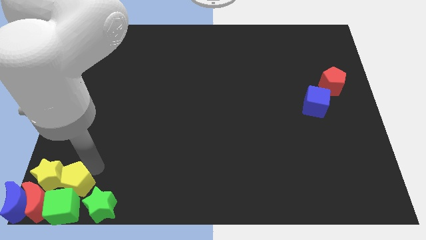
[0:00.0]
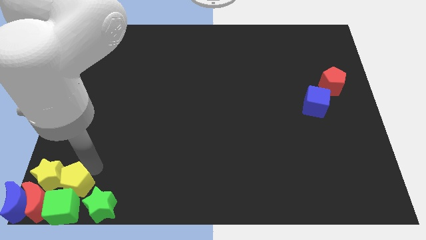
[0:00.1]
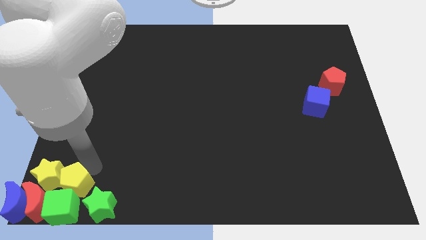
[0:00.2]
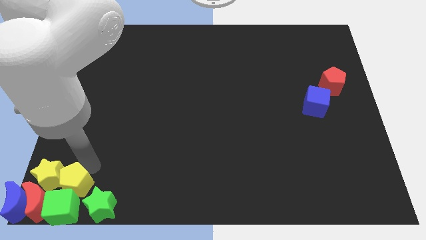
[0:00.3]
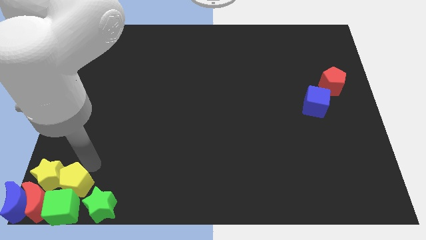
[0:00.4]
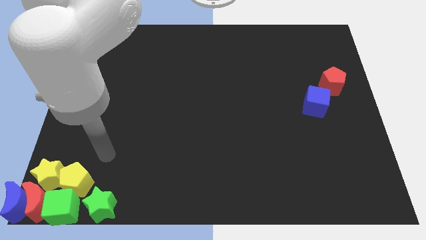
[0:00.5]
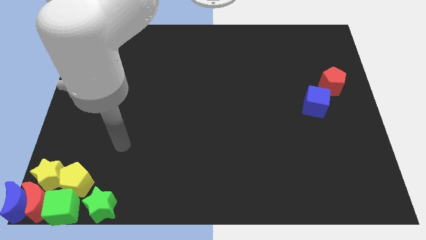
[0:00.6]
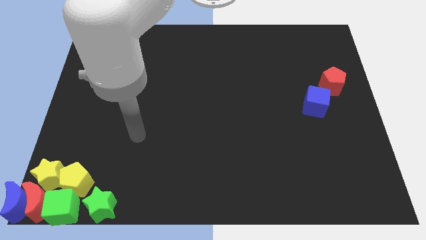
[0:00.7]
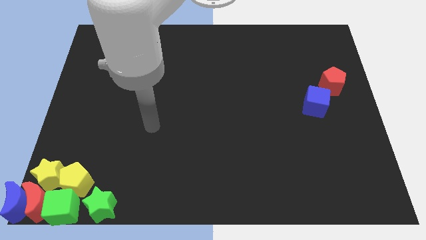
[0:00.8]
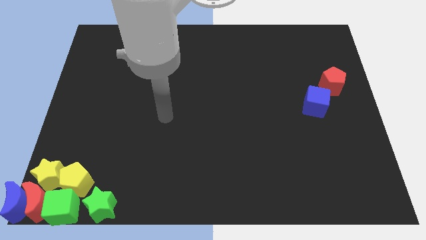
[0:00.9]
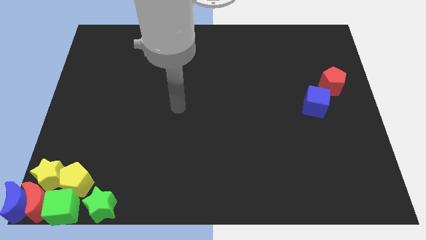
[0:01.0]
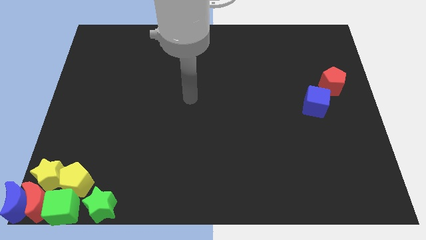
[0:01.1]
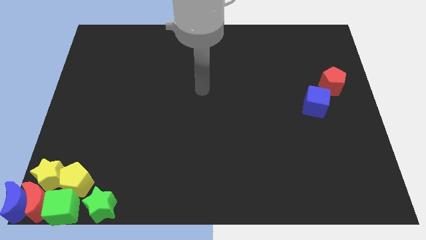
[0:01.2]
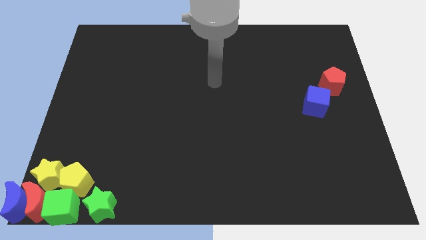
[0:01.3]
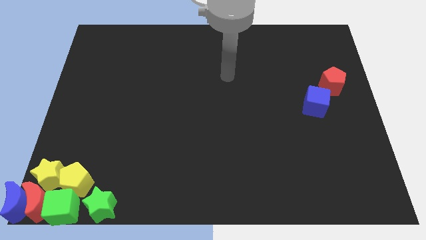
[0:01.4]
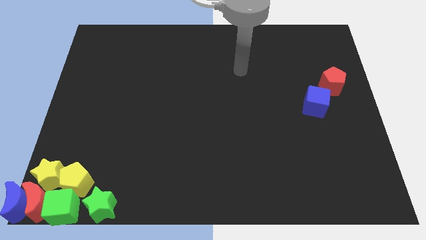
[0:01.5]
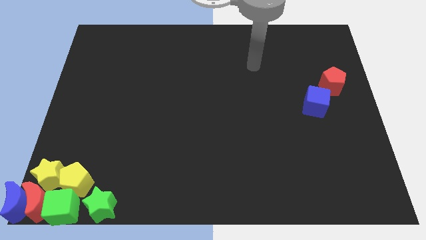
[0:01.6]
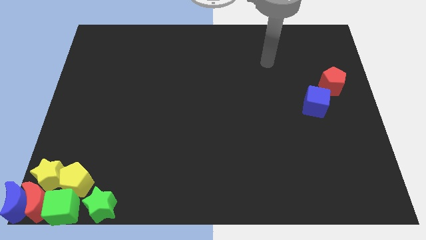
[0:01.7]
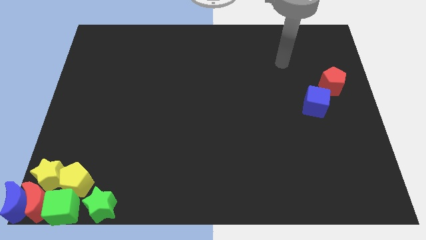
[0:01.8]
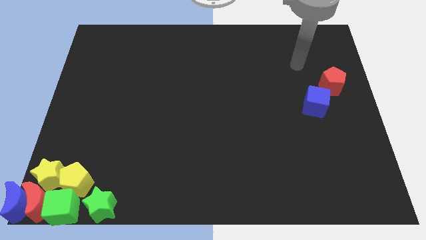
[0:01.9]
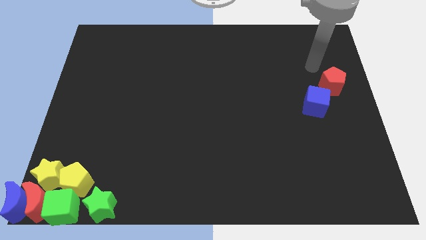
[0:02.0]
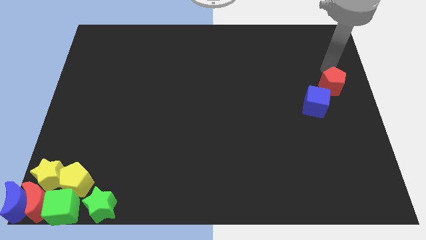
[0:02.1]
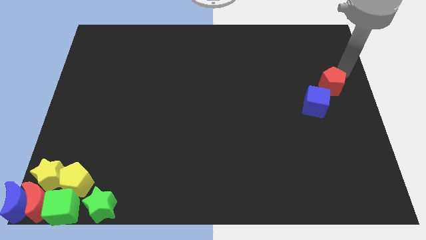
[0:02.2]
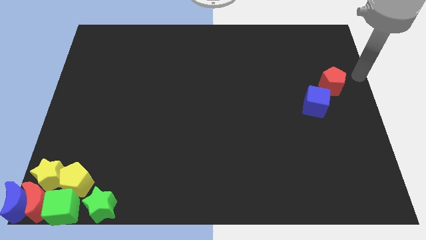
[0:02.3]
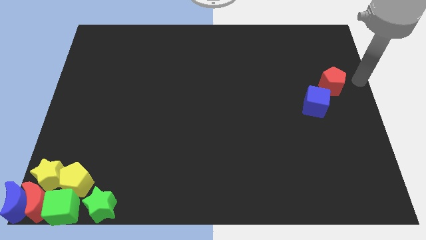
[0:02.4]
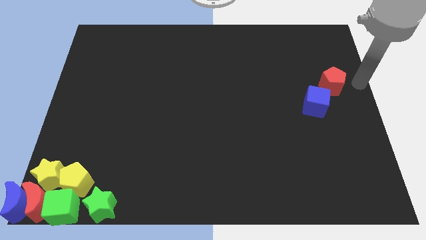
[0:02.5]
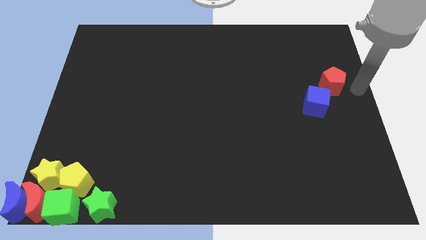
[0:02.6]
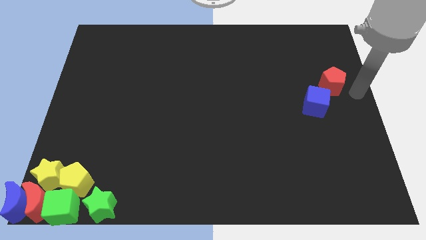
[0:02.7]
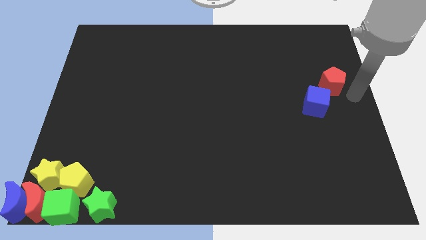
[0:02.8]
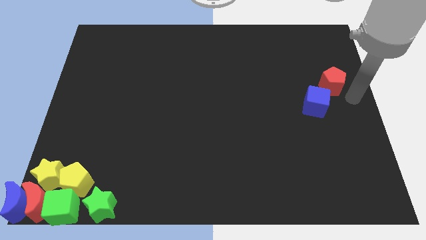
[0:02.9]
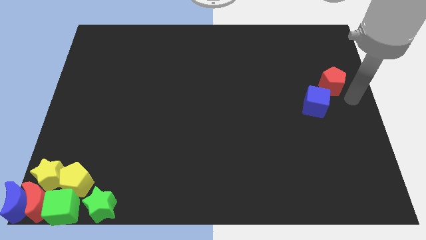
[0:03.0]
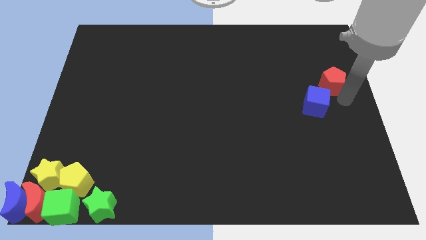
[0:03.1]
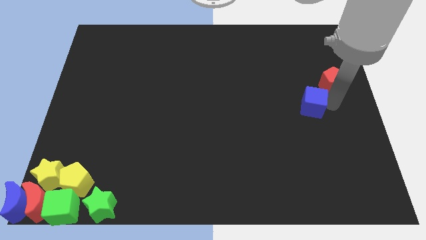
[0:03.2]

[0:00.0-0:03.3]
place the arm right to the blue cube

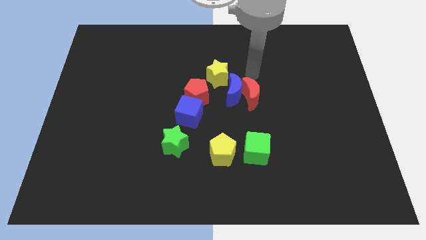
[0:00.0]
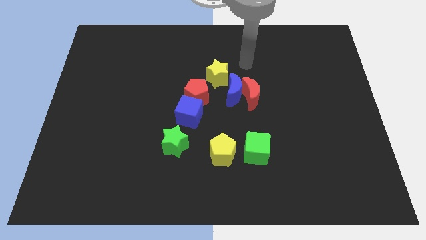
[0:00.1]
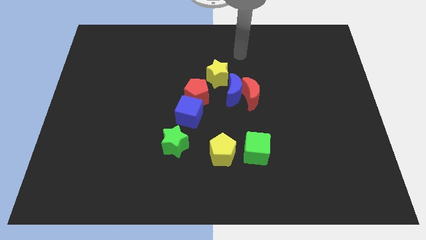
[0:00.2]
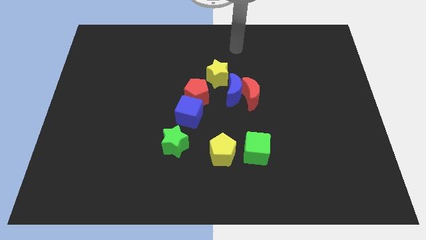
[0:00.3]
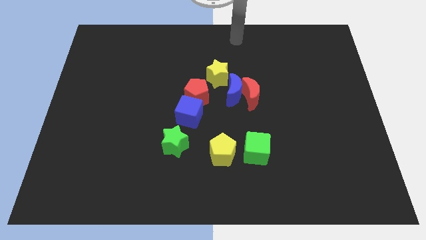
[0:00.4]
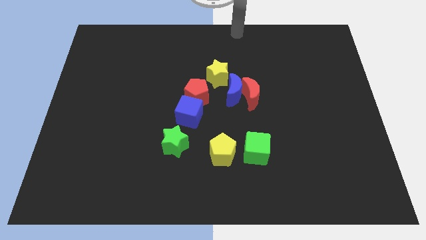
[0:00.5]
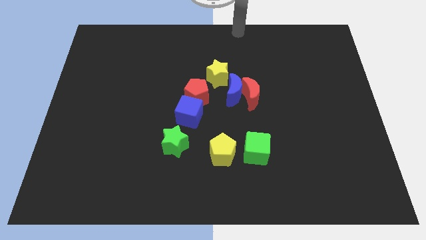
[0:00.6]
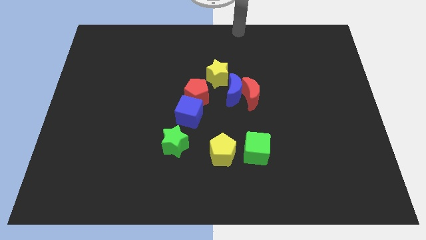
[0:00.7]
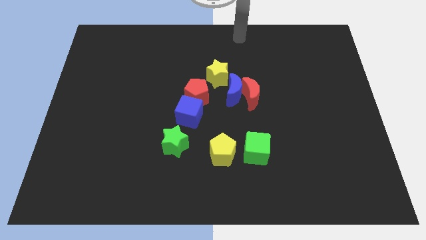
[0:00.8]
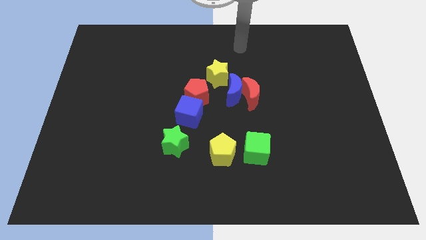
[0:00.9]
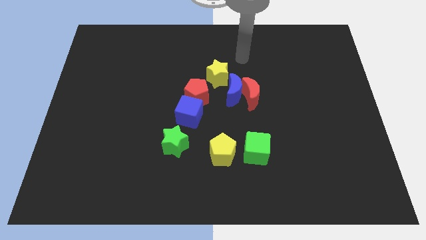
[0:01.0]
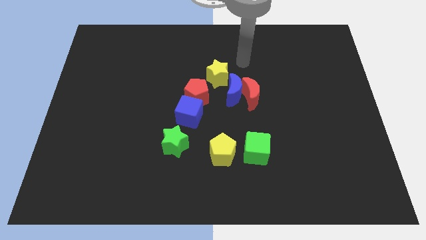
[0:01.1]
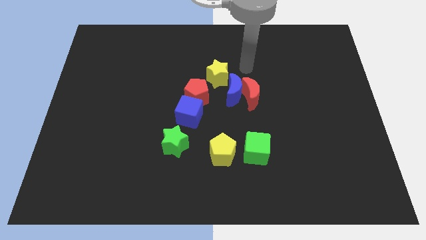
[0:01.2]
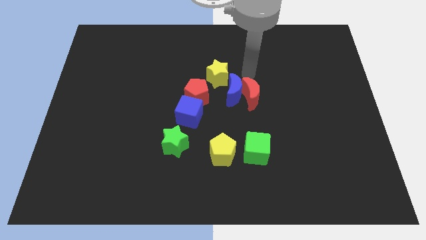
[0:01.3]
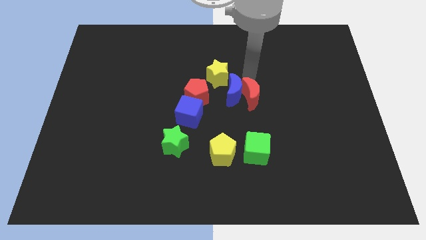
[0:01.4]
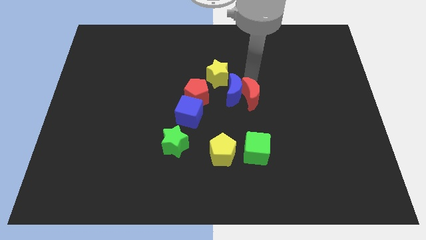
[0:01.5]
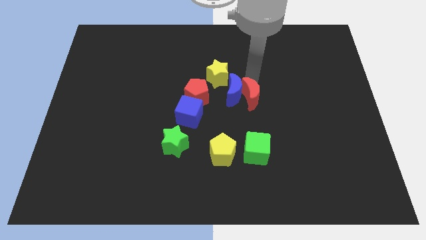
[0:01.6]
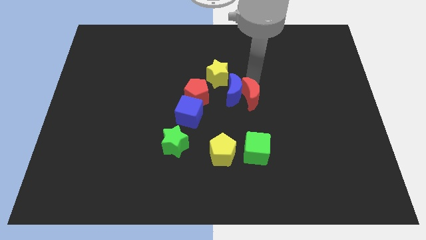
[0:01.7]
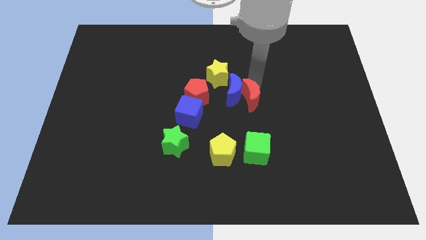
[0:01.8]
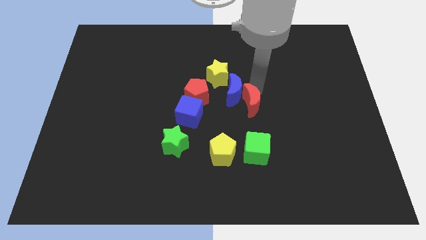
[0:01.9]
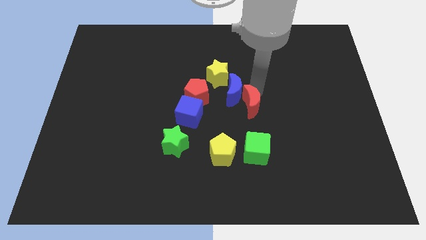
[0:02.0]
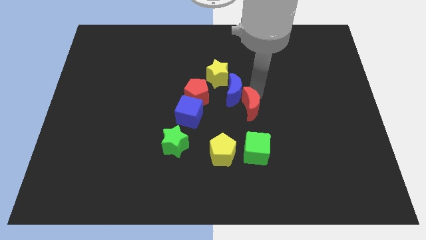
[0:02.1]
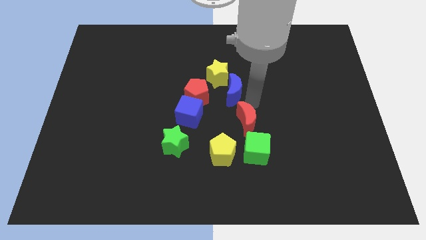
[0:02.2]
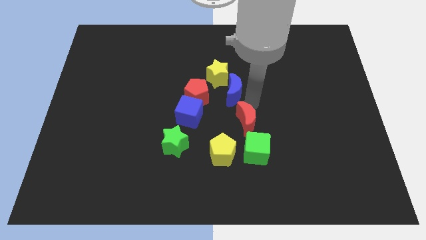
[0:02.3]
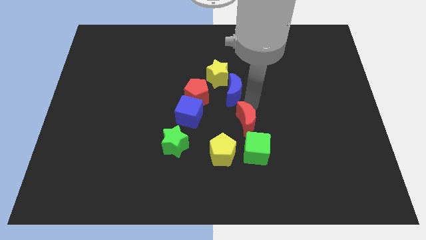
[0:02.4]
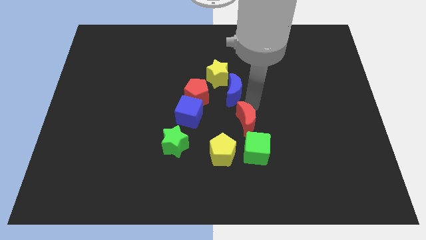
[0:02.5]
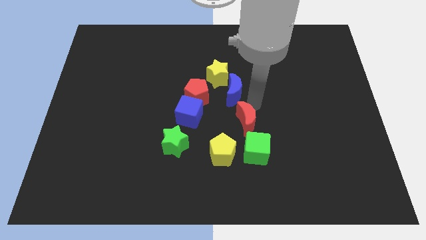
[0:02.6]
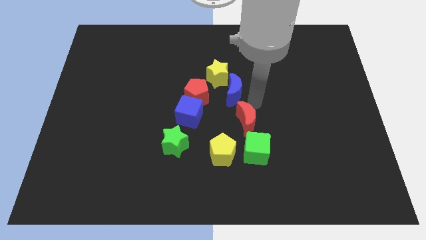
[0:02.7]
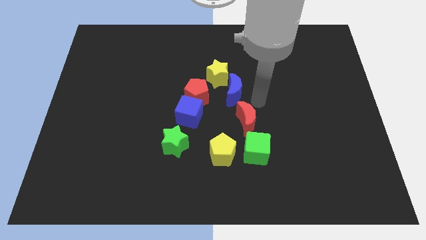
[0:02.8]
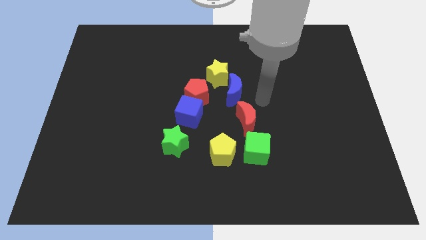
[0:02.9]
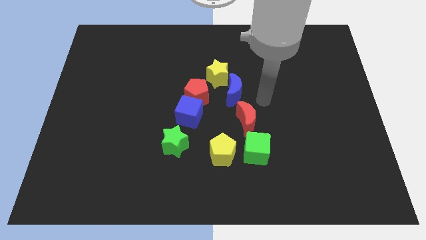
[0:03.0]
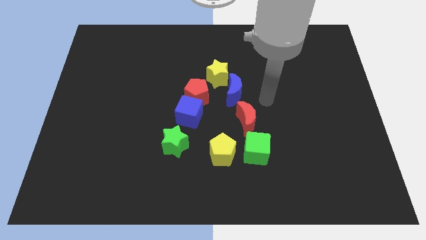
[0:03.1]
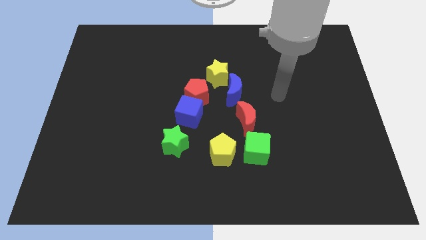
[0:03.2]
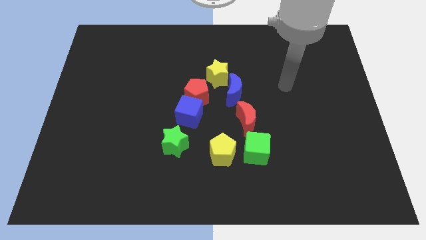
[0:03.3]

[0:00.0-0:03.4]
place the red moon in between the blue moon and at the green cube

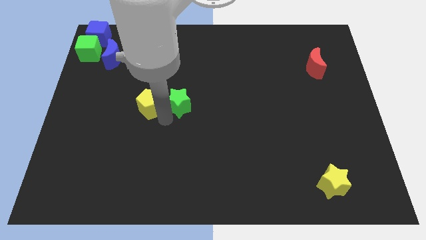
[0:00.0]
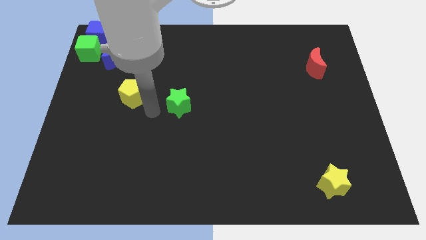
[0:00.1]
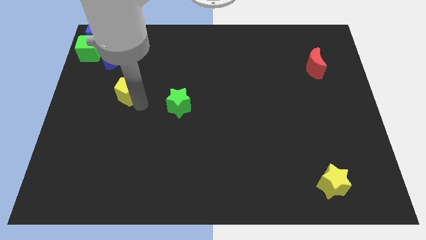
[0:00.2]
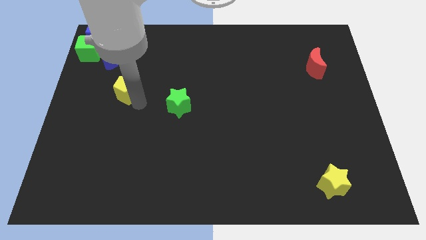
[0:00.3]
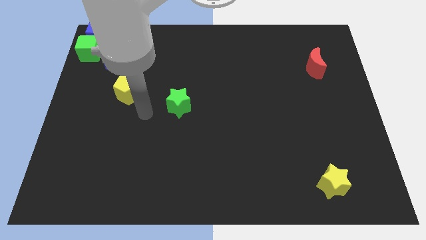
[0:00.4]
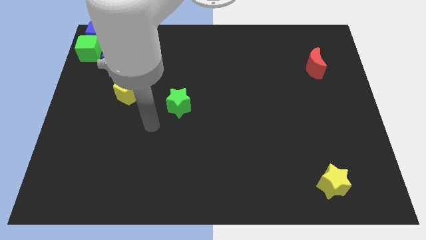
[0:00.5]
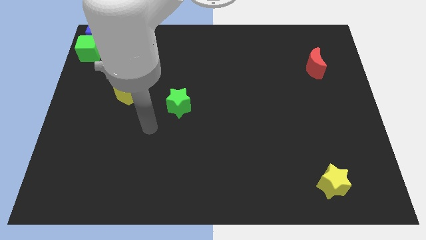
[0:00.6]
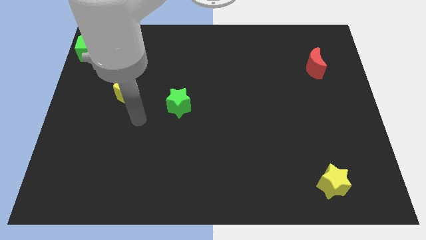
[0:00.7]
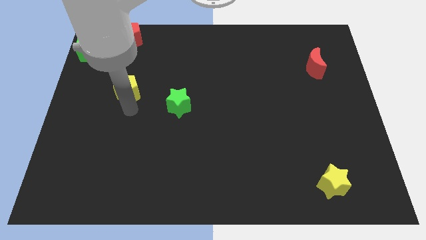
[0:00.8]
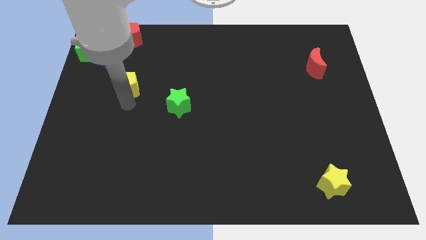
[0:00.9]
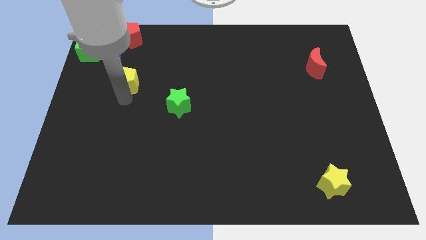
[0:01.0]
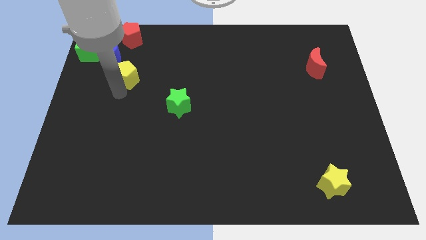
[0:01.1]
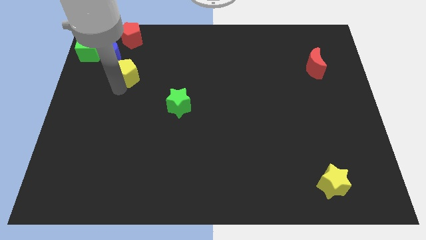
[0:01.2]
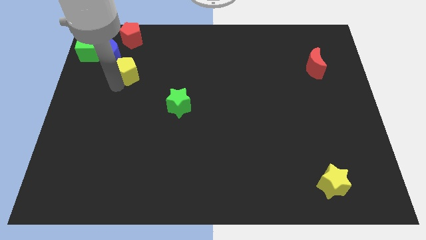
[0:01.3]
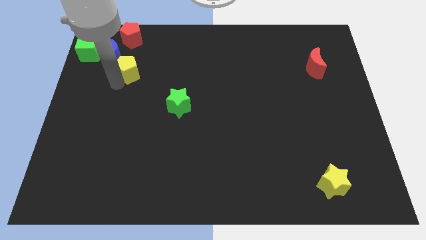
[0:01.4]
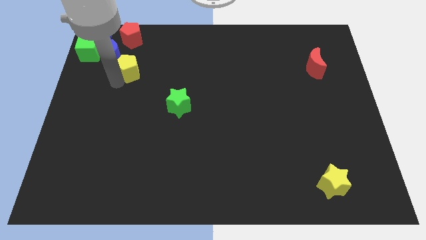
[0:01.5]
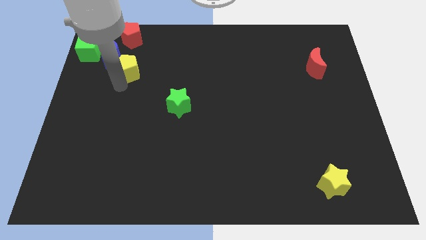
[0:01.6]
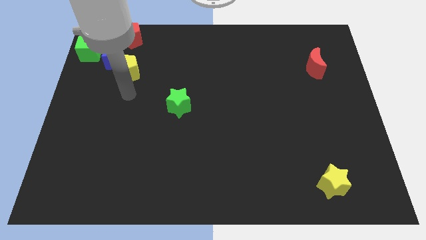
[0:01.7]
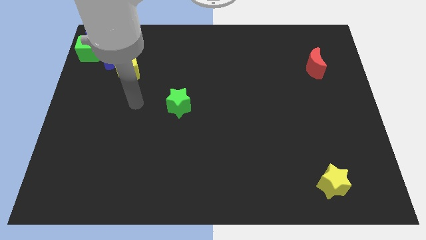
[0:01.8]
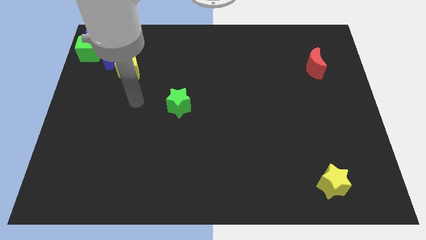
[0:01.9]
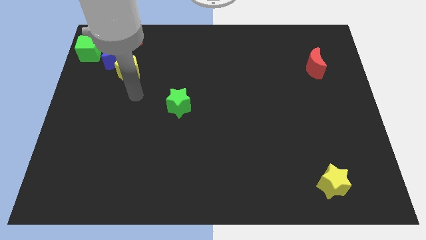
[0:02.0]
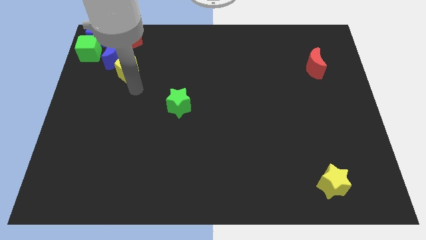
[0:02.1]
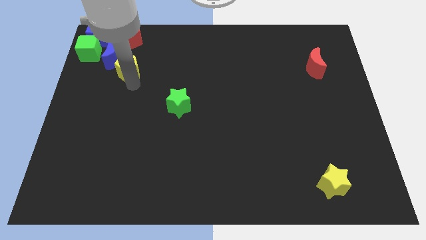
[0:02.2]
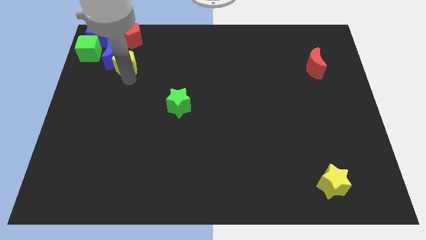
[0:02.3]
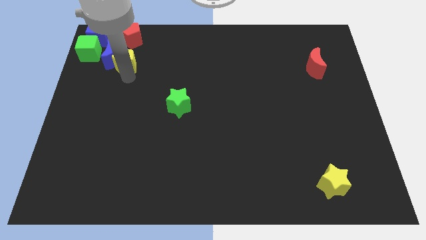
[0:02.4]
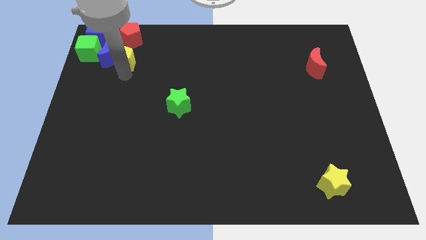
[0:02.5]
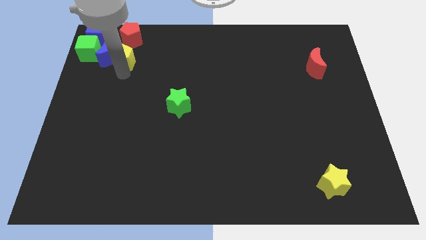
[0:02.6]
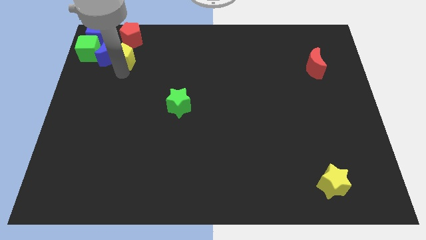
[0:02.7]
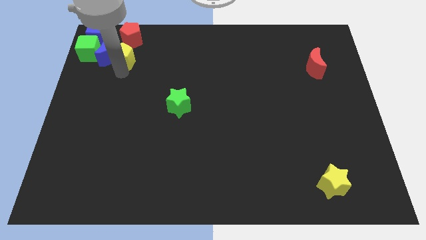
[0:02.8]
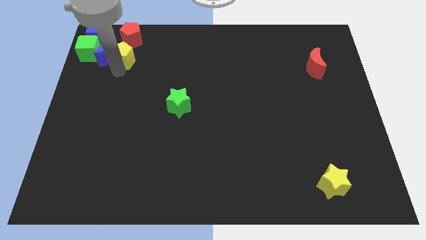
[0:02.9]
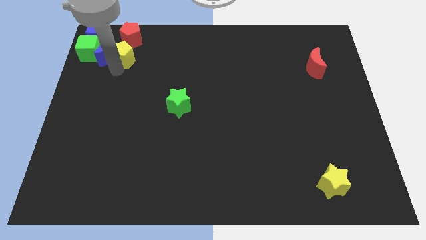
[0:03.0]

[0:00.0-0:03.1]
separate yellow pentagon from green star
